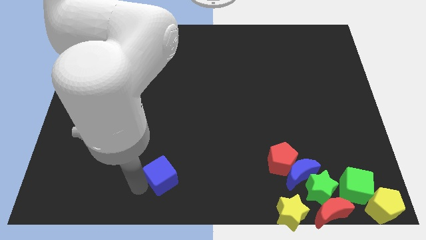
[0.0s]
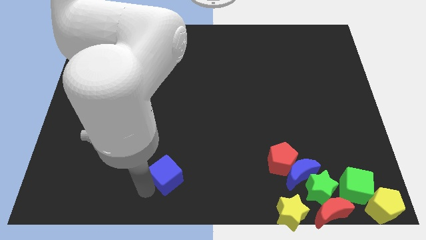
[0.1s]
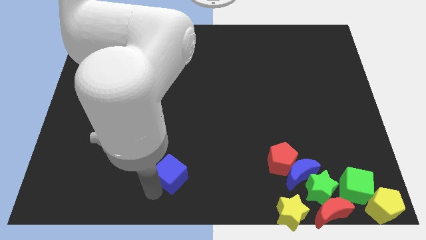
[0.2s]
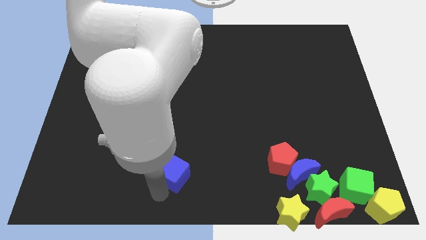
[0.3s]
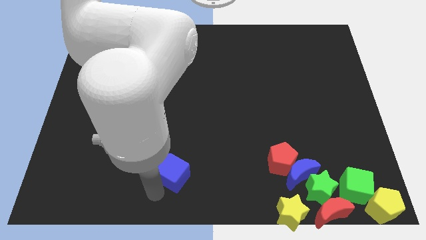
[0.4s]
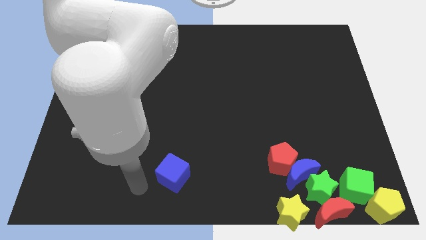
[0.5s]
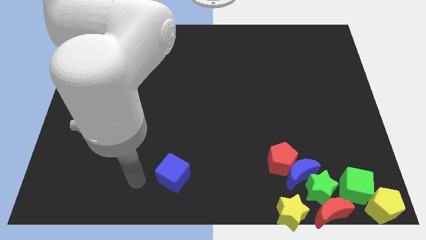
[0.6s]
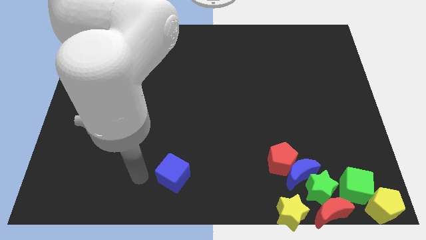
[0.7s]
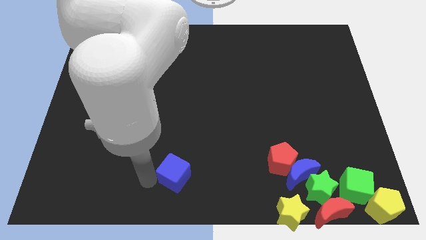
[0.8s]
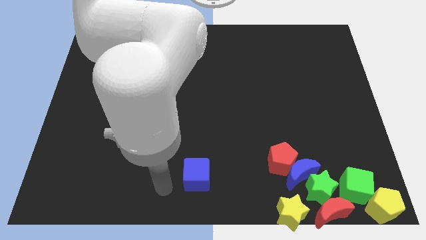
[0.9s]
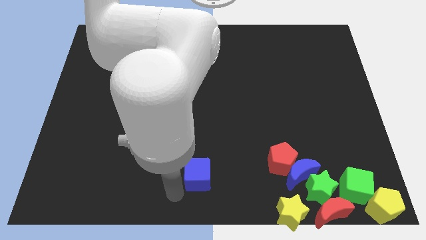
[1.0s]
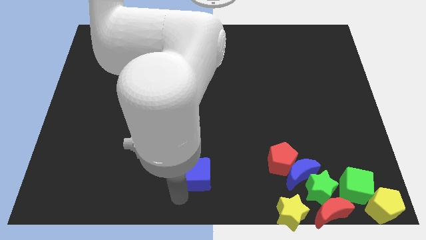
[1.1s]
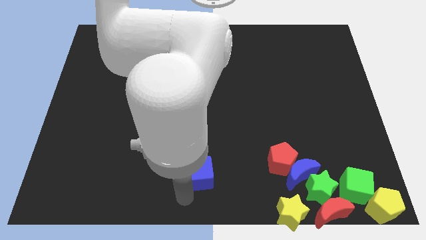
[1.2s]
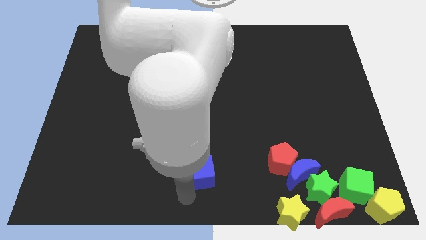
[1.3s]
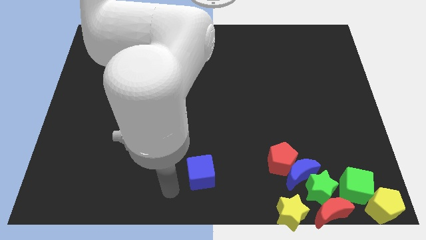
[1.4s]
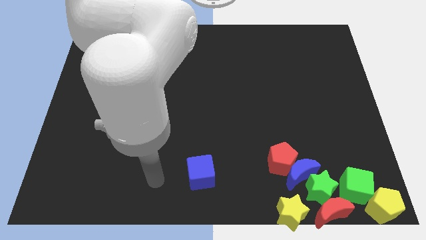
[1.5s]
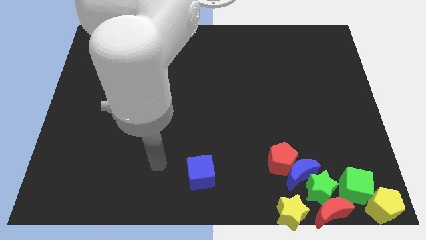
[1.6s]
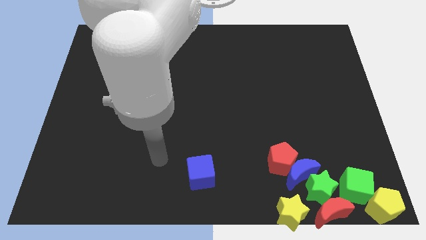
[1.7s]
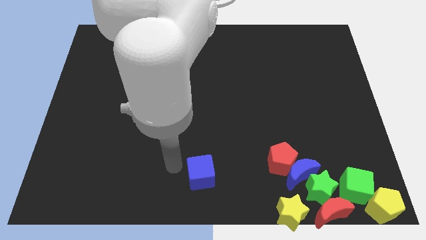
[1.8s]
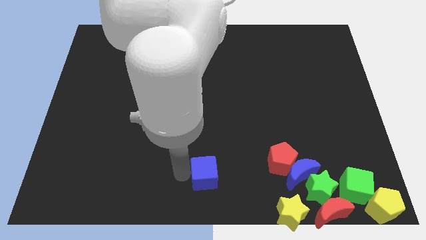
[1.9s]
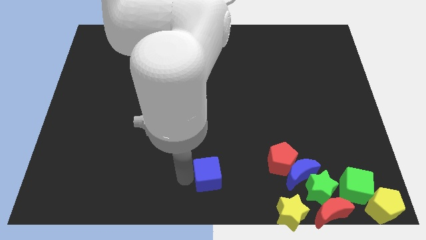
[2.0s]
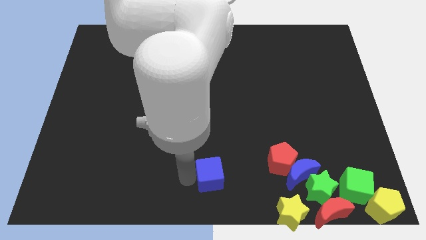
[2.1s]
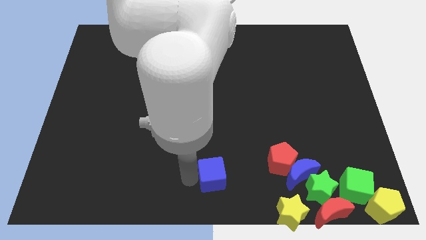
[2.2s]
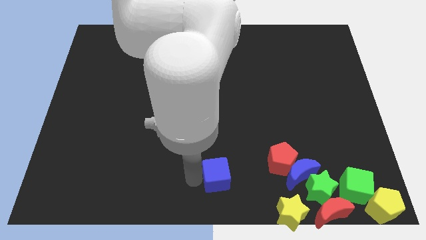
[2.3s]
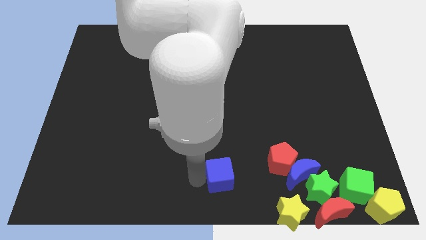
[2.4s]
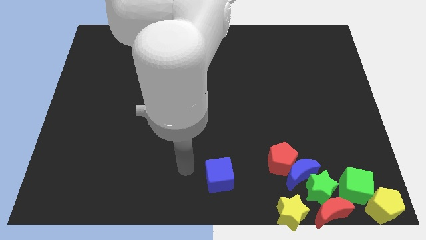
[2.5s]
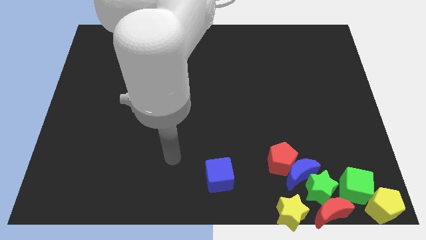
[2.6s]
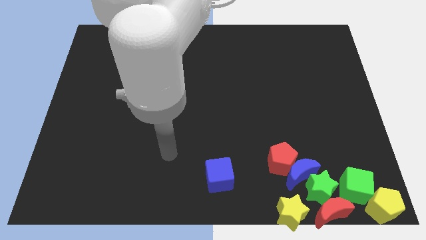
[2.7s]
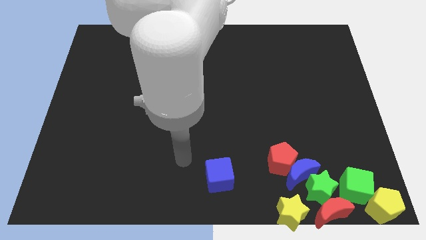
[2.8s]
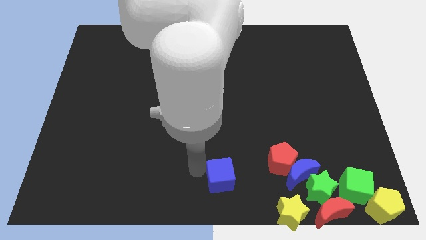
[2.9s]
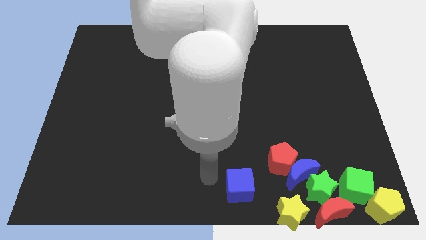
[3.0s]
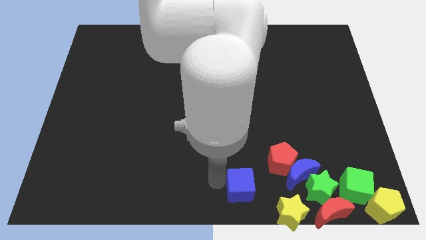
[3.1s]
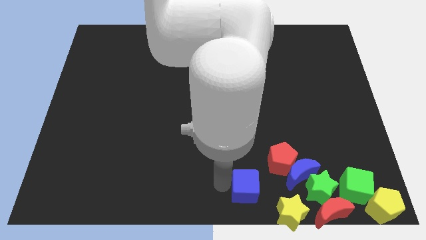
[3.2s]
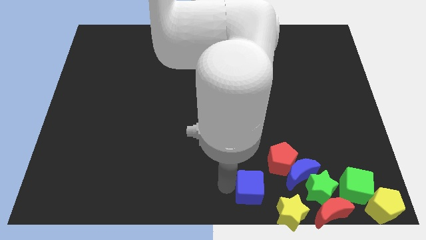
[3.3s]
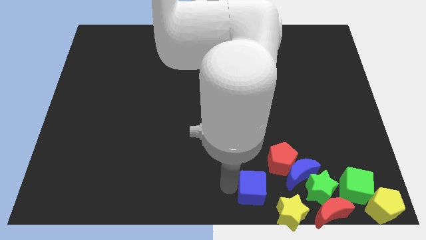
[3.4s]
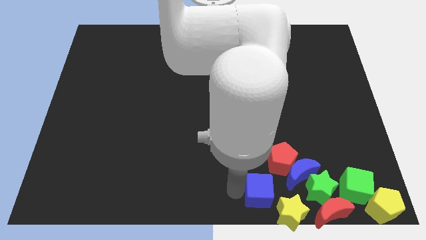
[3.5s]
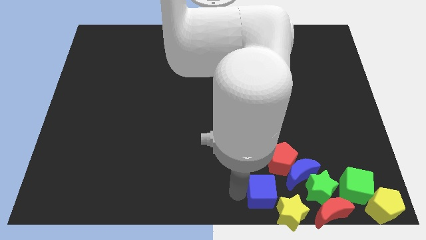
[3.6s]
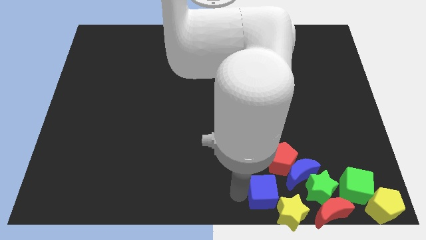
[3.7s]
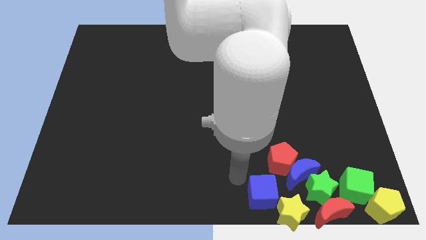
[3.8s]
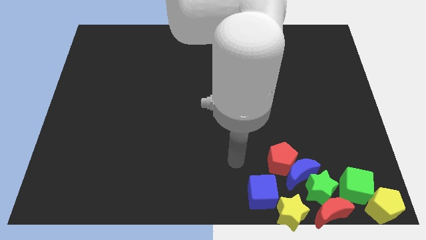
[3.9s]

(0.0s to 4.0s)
push the blue cube into the yellow star

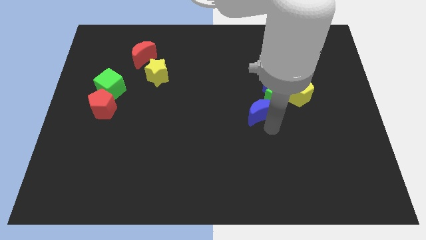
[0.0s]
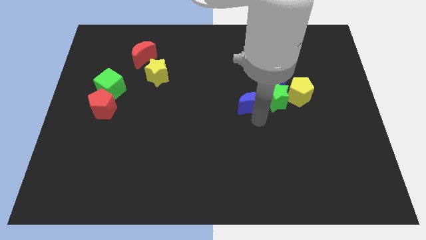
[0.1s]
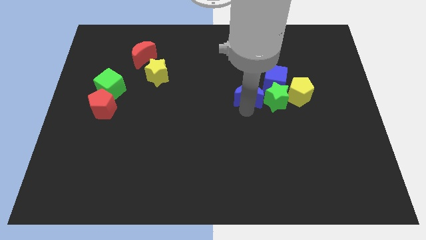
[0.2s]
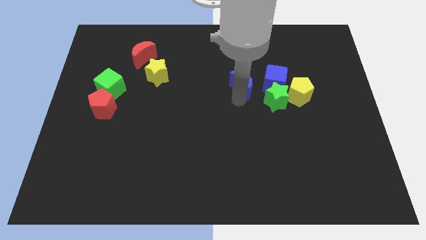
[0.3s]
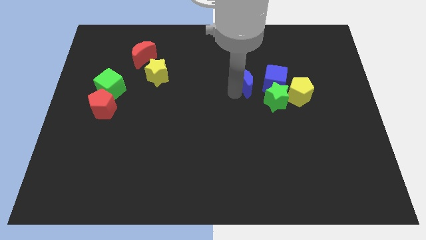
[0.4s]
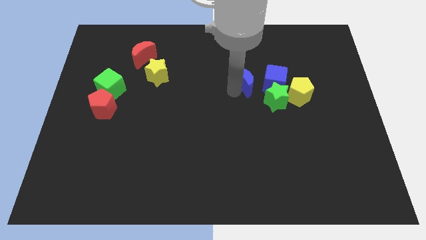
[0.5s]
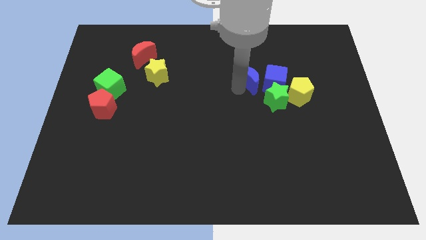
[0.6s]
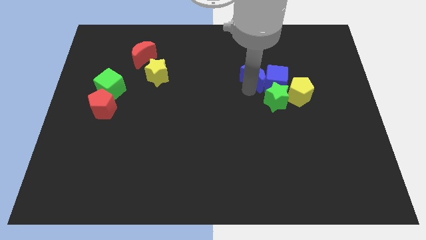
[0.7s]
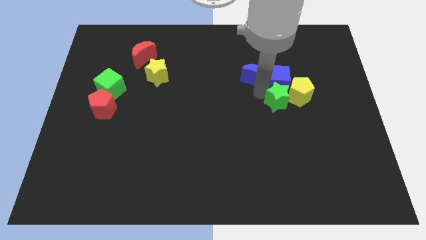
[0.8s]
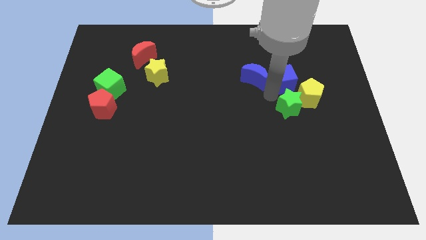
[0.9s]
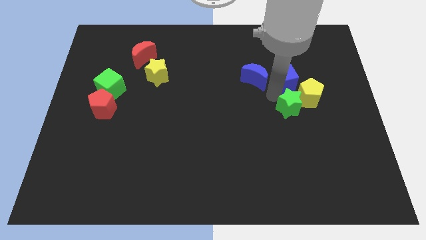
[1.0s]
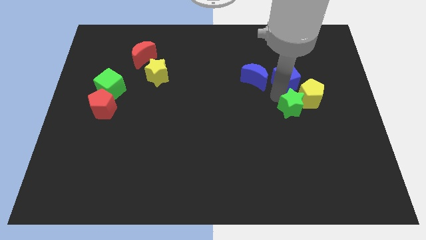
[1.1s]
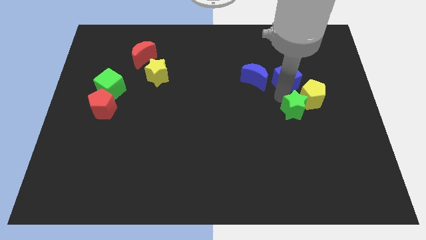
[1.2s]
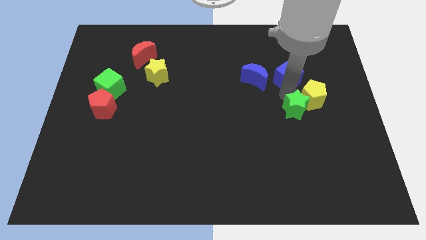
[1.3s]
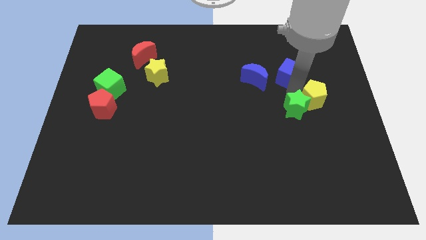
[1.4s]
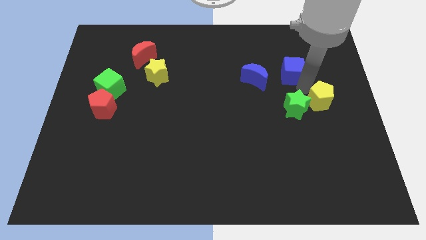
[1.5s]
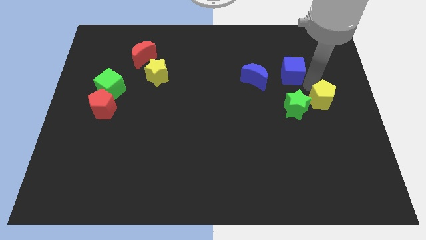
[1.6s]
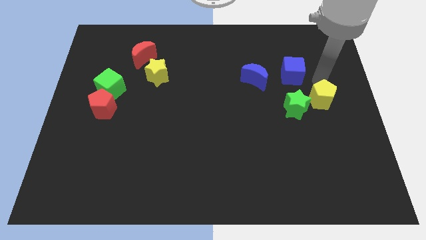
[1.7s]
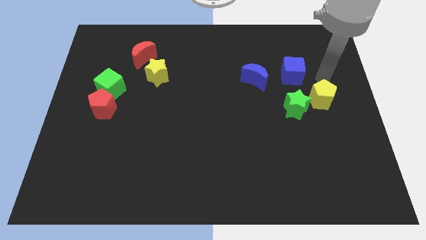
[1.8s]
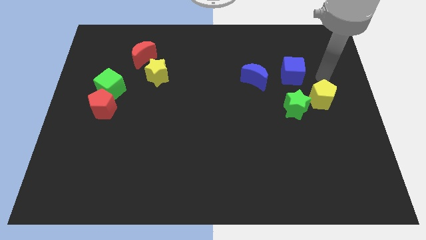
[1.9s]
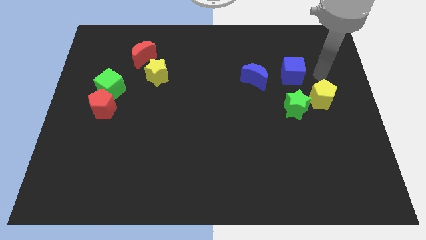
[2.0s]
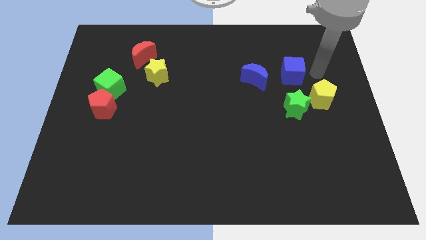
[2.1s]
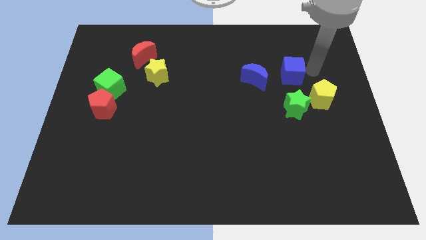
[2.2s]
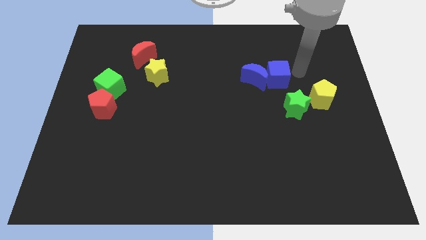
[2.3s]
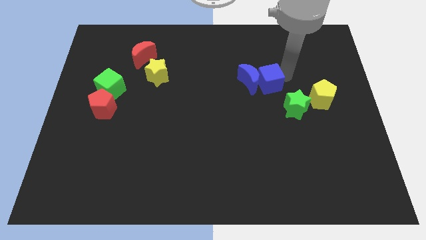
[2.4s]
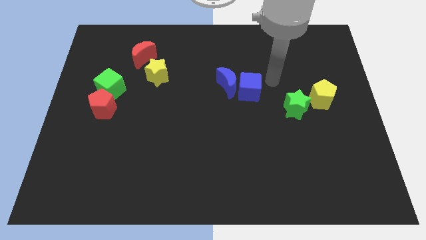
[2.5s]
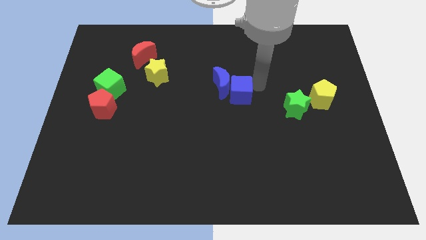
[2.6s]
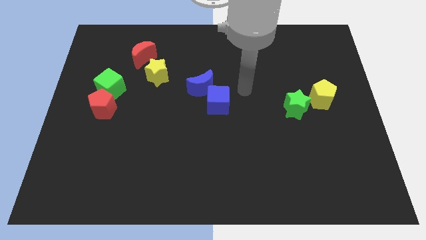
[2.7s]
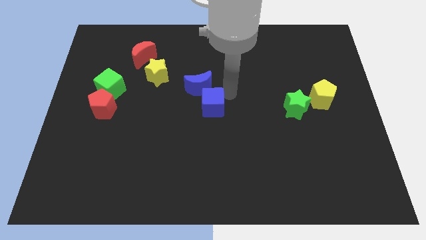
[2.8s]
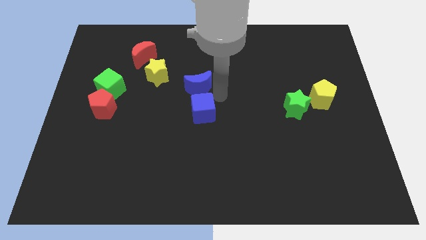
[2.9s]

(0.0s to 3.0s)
push the blue blocks diagonal to the yellow star

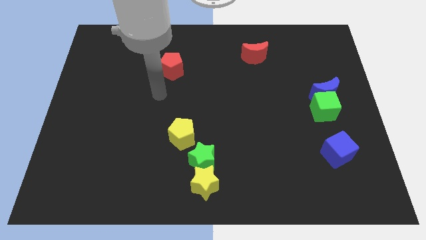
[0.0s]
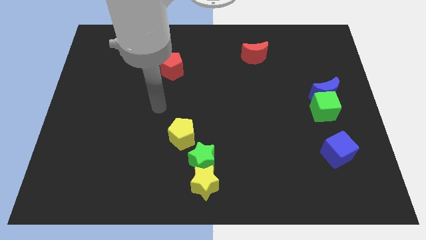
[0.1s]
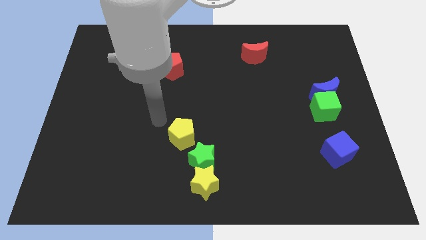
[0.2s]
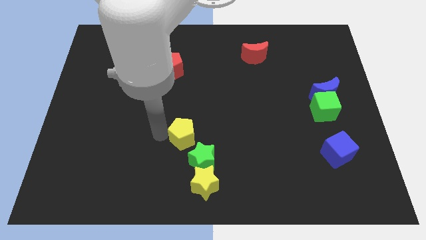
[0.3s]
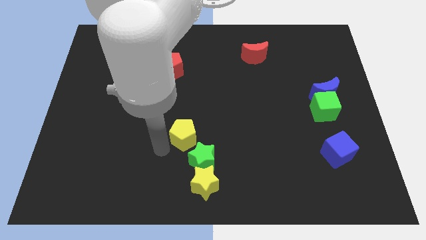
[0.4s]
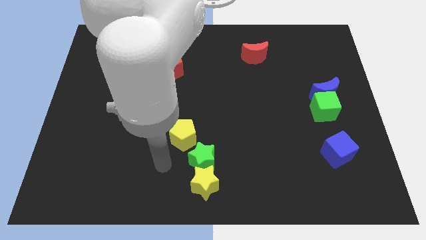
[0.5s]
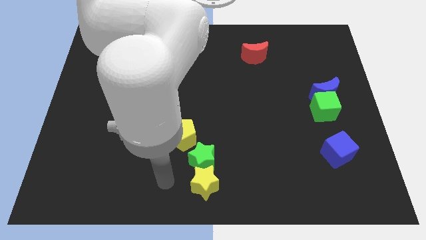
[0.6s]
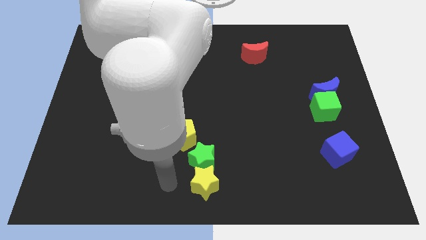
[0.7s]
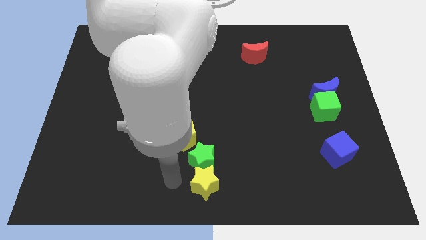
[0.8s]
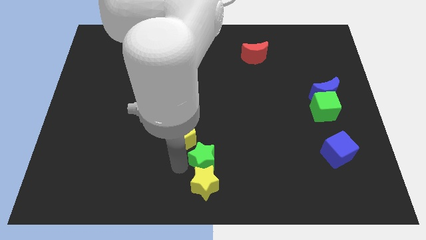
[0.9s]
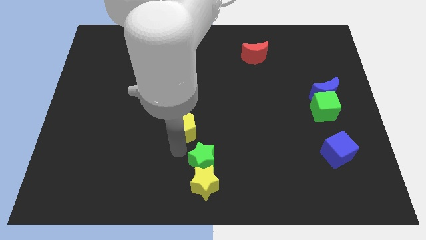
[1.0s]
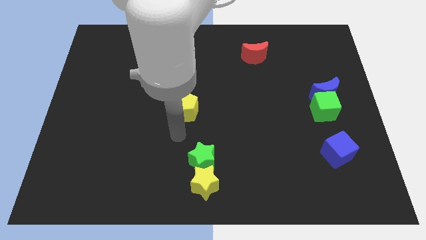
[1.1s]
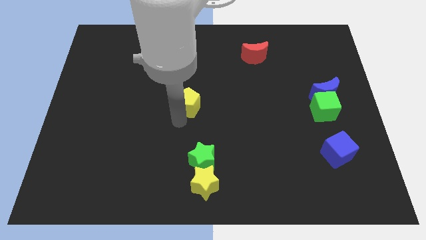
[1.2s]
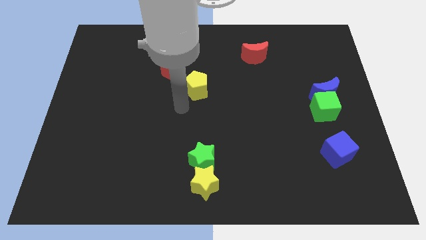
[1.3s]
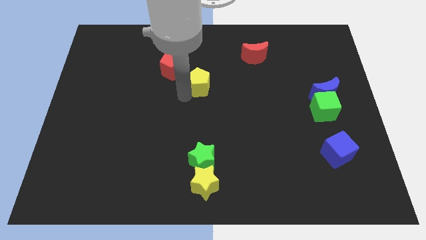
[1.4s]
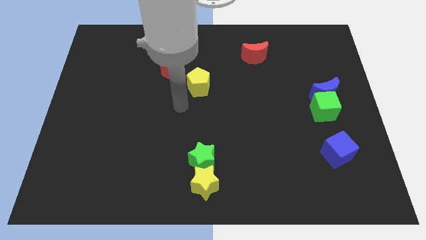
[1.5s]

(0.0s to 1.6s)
push the yellow pentagon towards the red pentagon

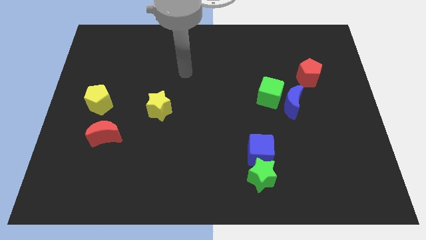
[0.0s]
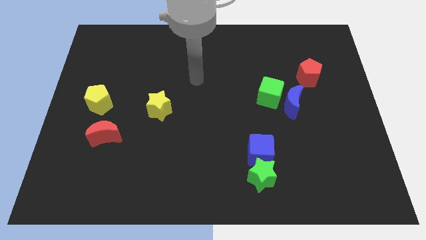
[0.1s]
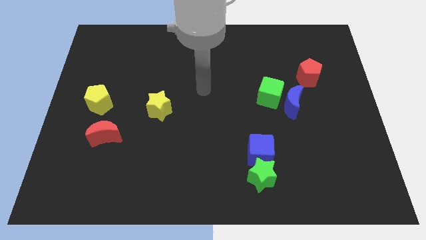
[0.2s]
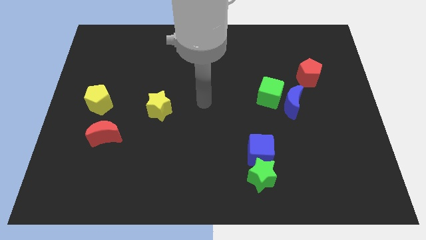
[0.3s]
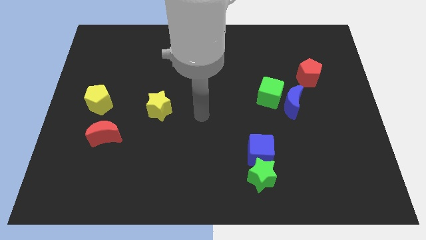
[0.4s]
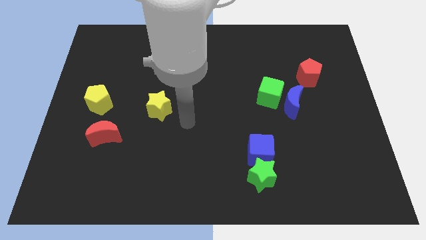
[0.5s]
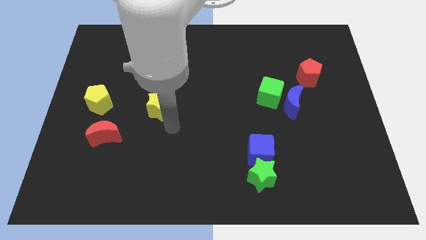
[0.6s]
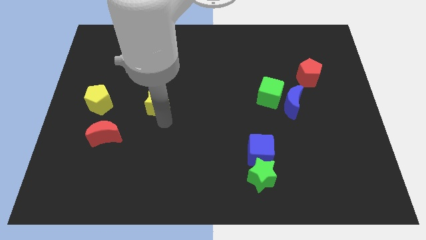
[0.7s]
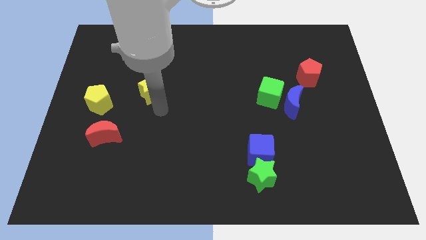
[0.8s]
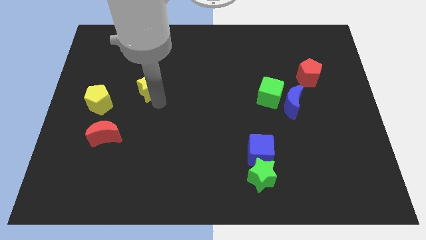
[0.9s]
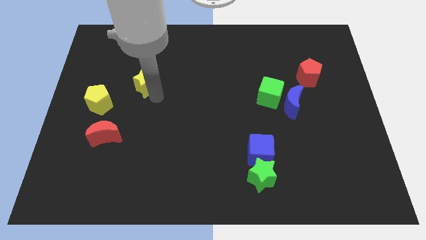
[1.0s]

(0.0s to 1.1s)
place the yellow star right to the yellow pentagon
